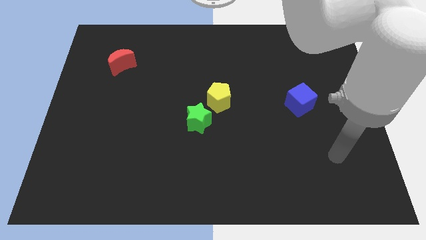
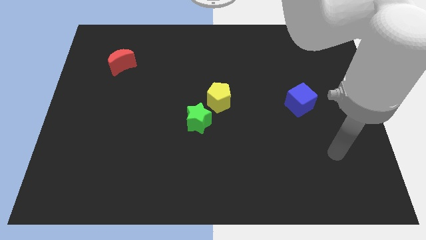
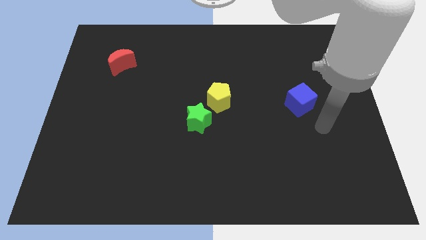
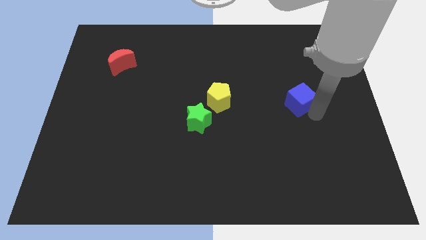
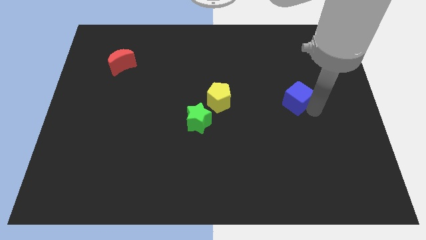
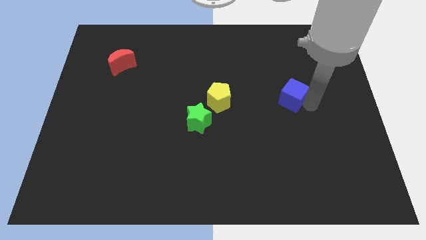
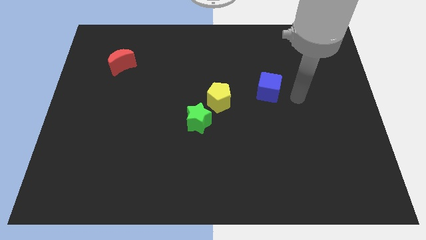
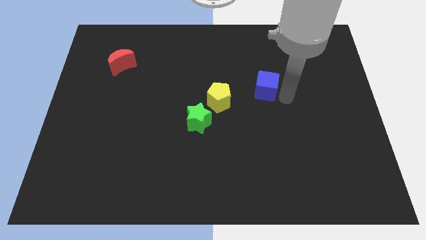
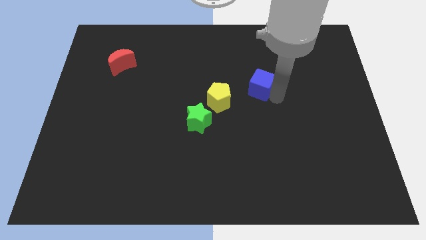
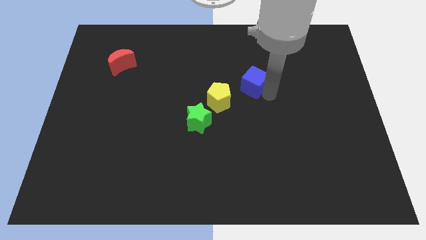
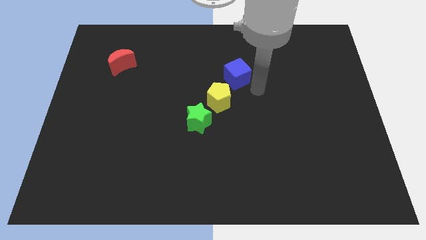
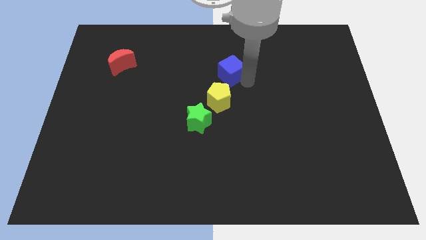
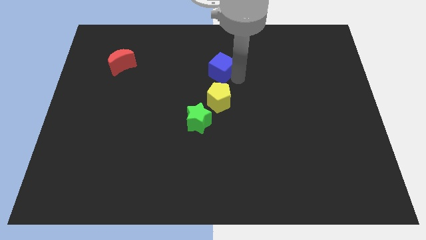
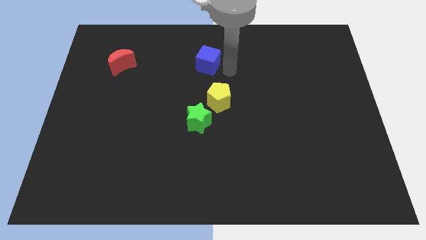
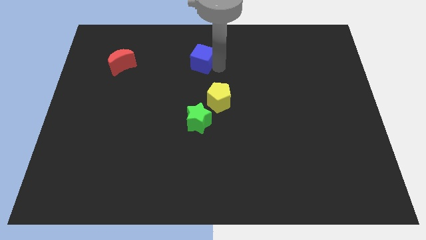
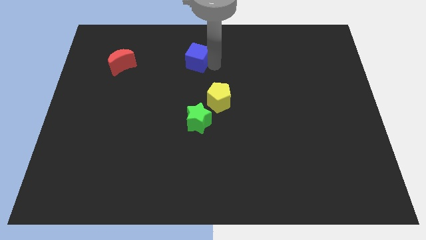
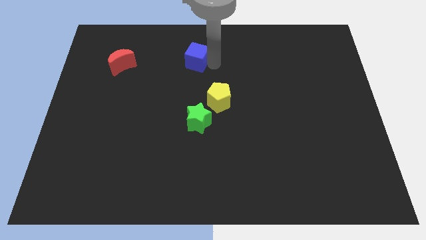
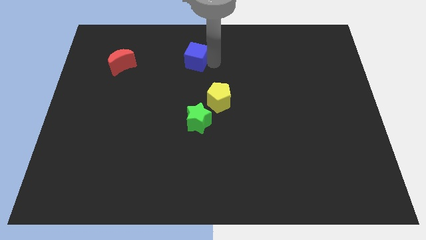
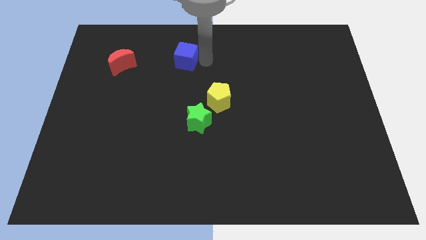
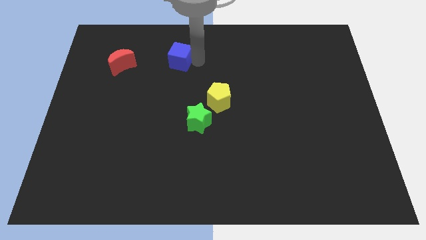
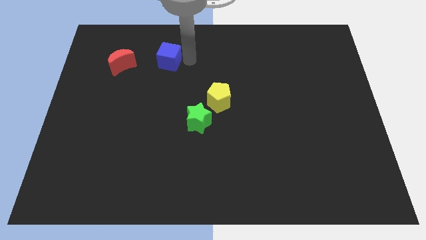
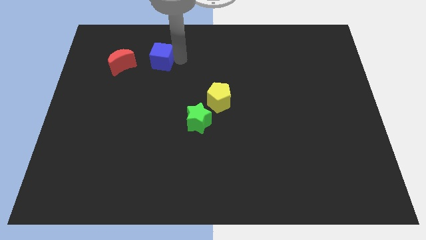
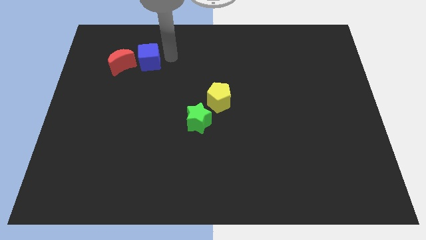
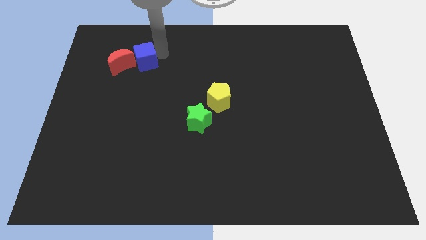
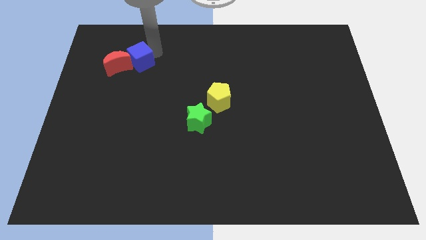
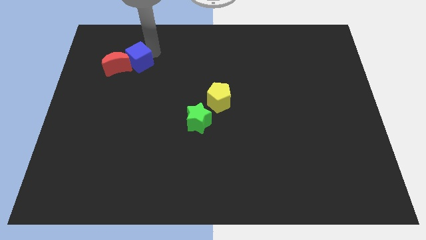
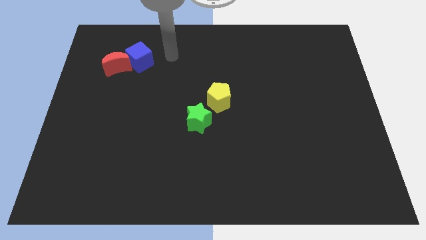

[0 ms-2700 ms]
slide the blue block to the red block

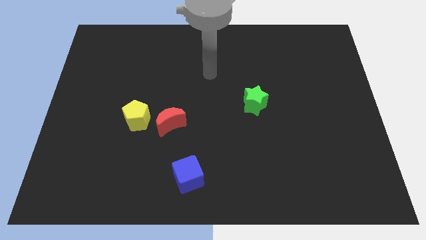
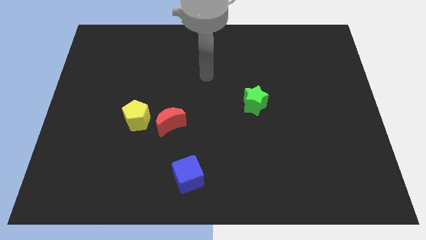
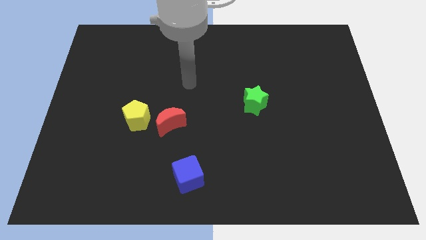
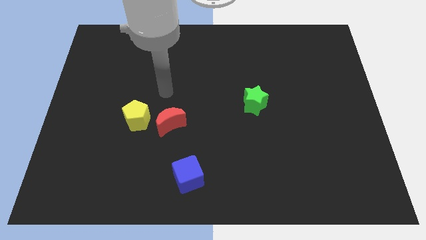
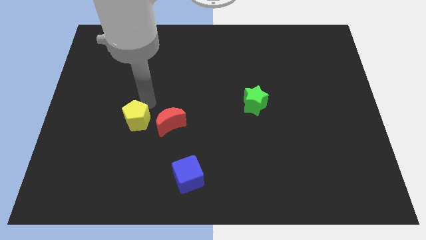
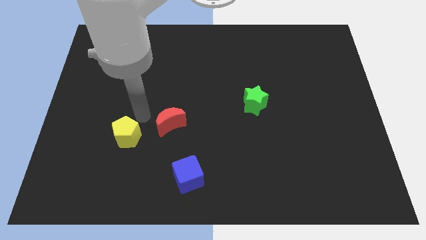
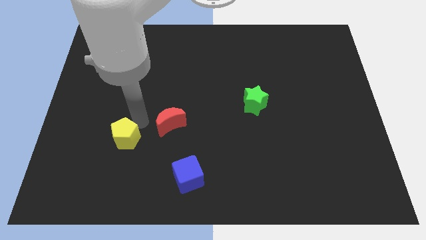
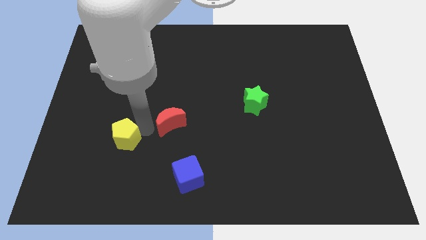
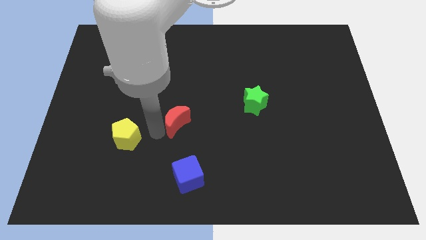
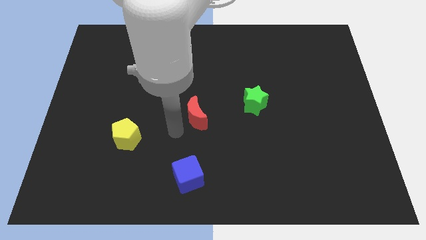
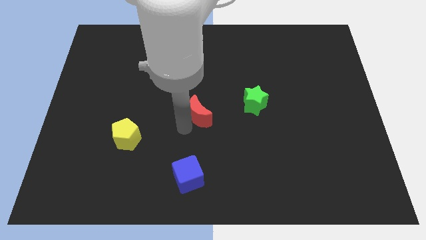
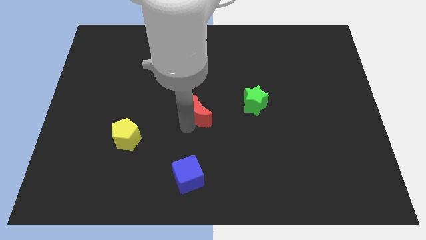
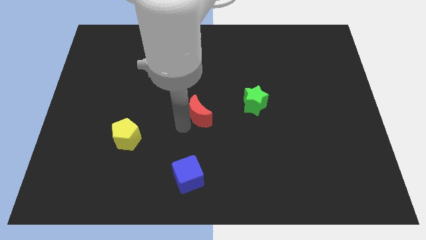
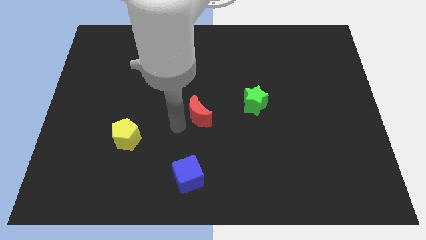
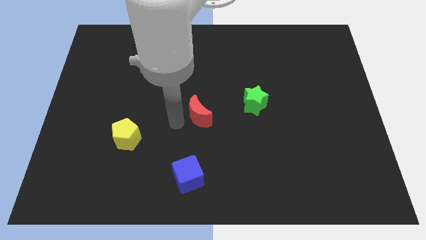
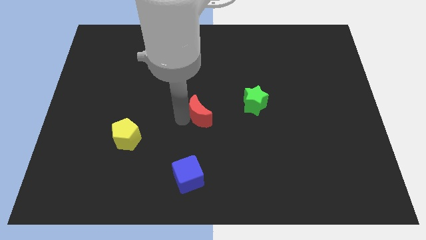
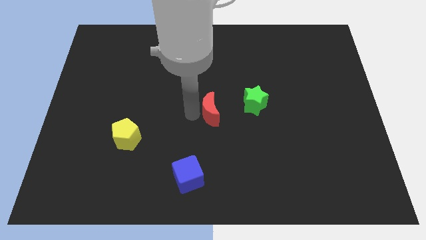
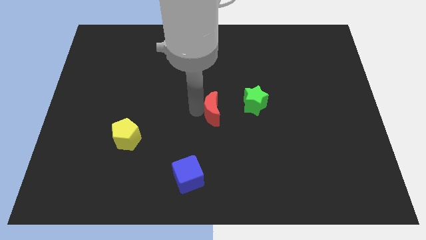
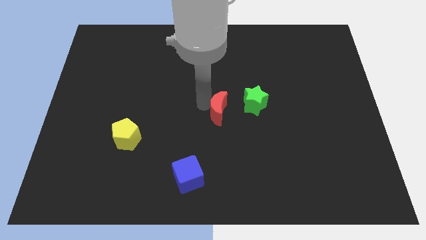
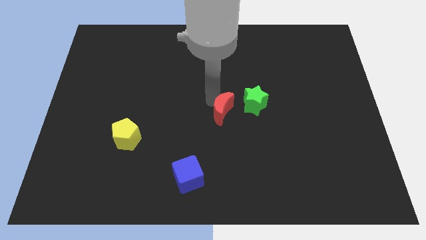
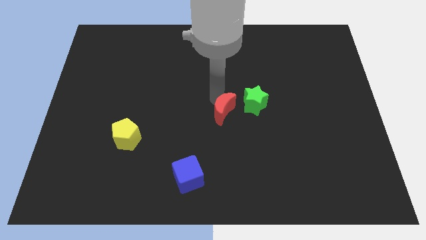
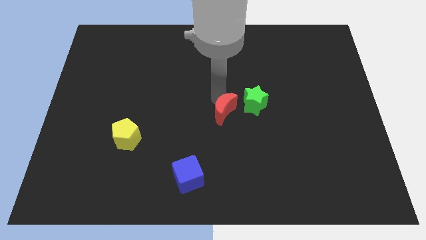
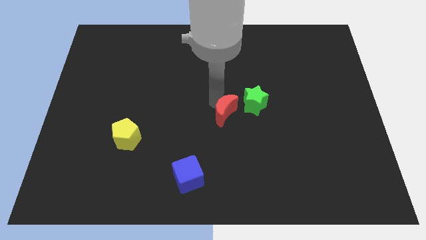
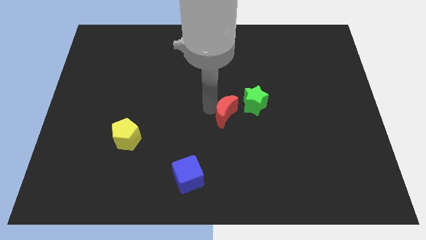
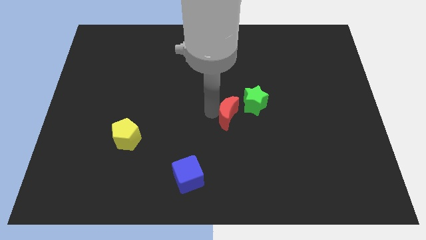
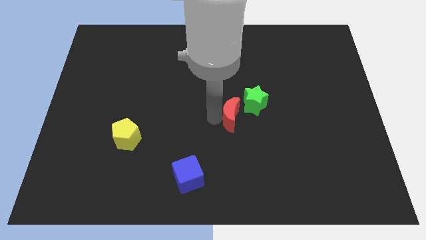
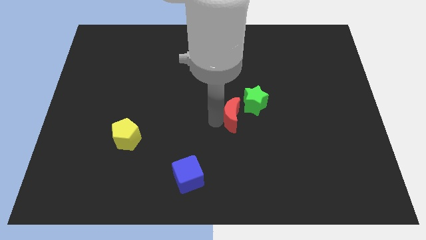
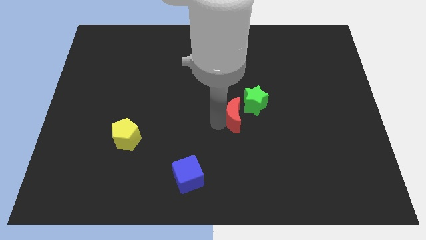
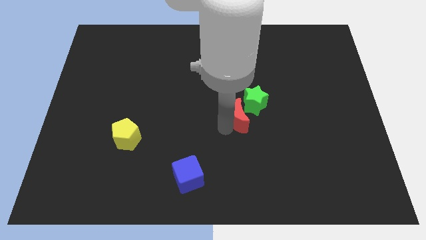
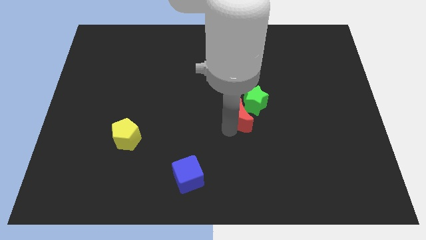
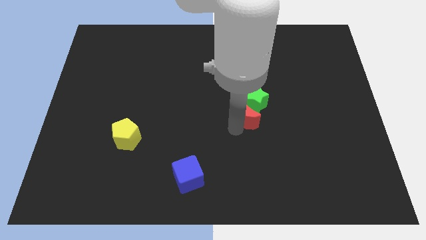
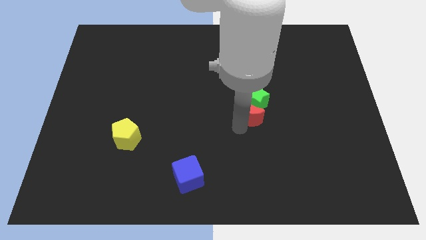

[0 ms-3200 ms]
slide the red moon close to the star

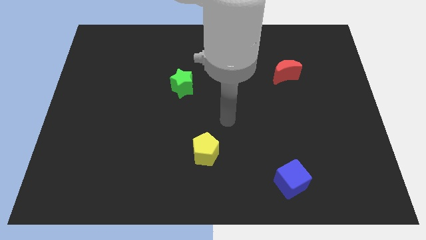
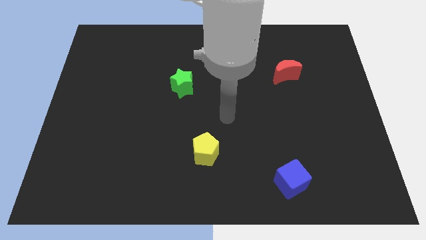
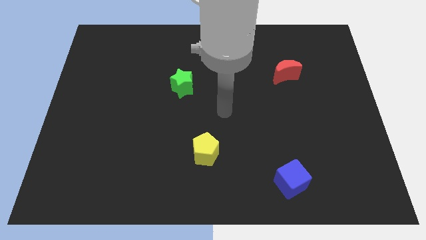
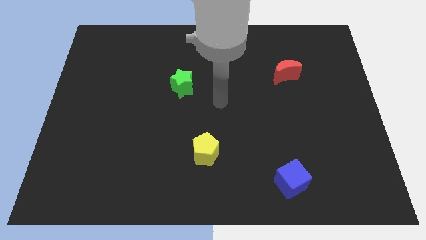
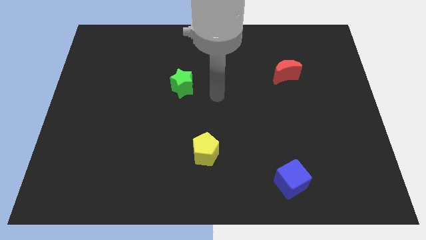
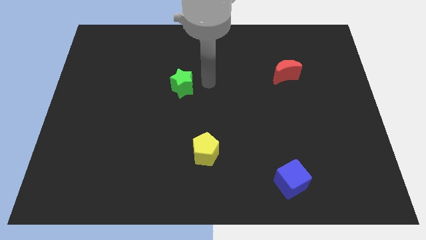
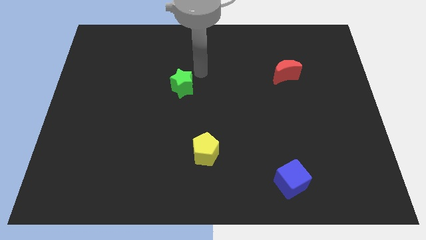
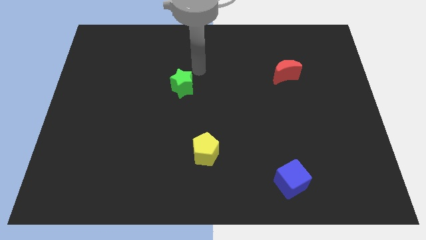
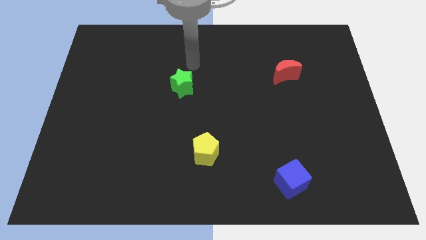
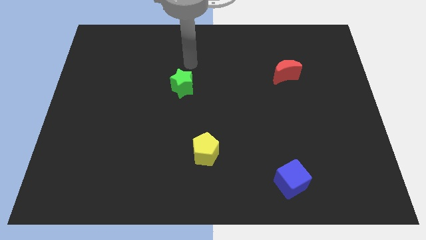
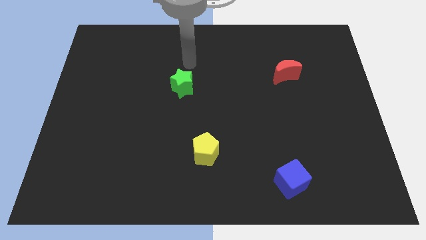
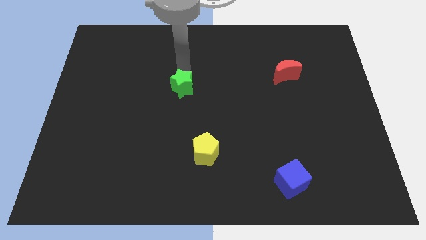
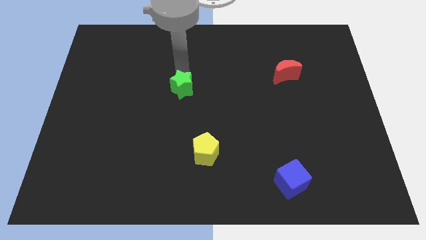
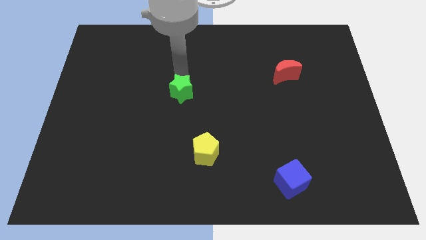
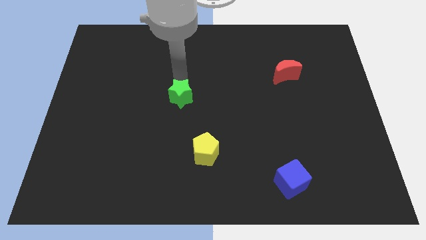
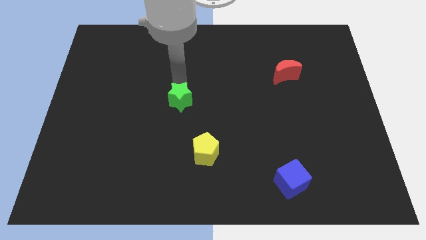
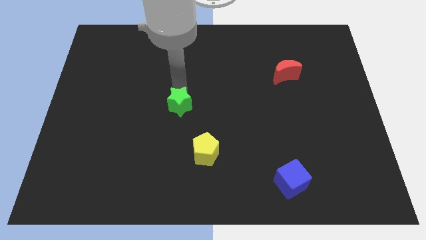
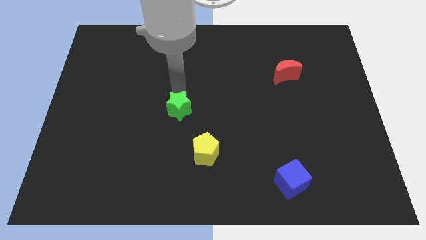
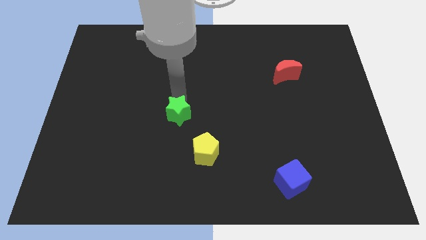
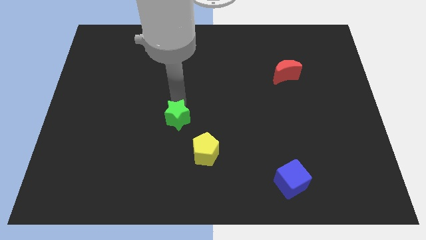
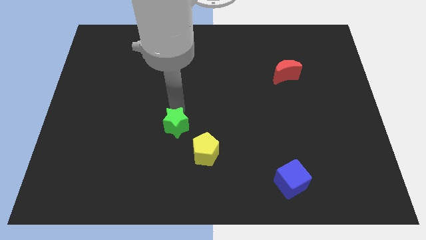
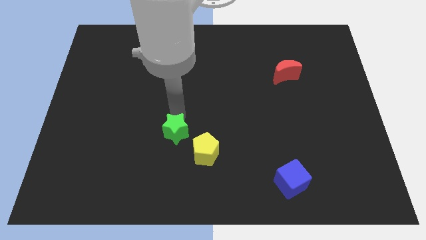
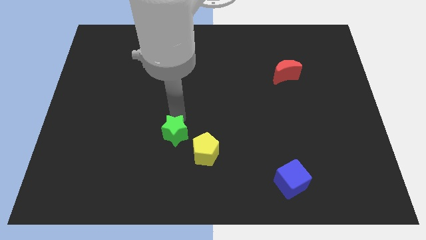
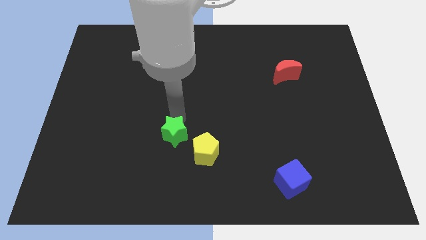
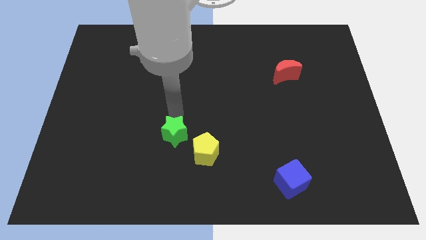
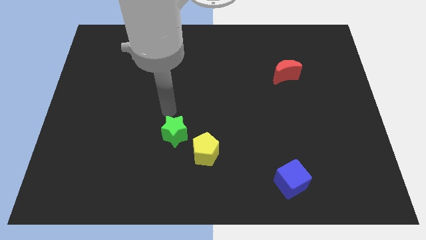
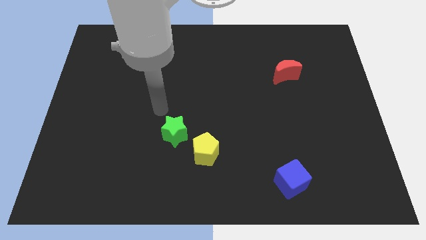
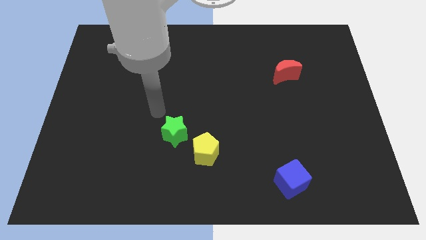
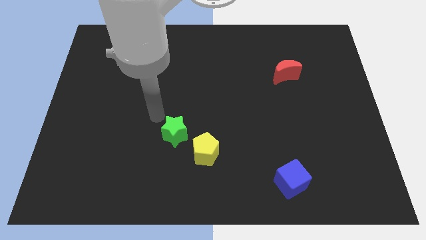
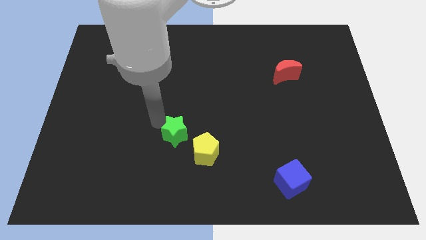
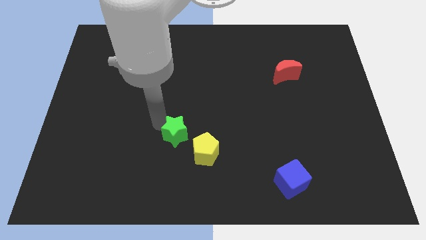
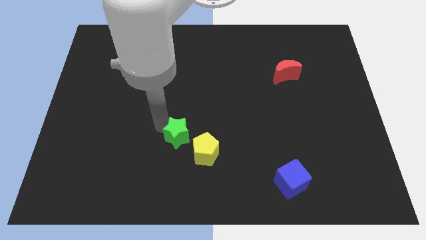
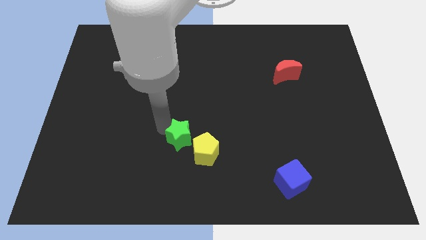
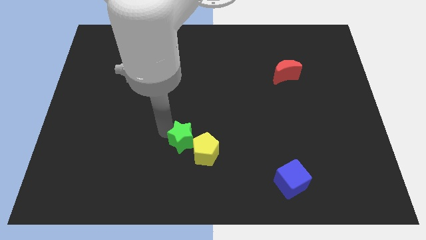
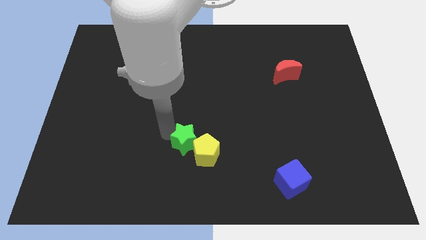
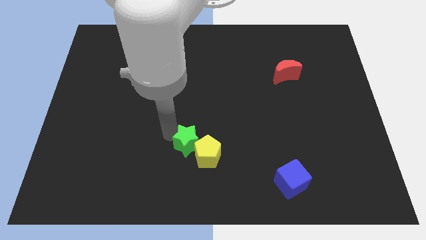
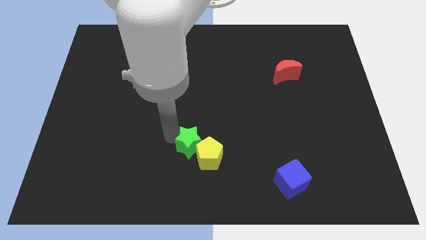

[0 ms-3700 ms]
put the green block next to the pentagon
